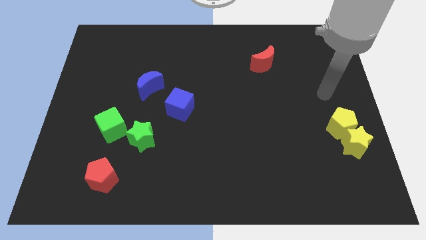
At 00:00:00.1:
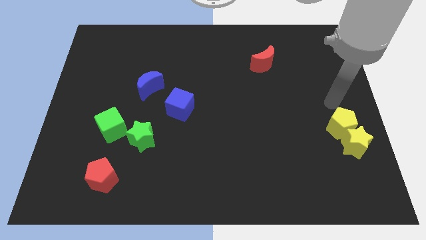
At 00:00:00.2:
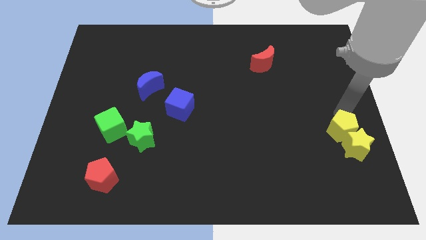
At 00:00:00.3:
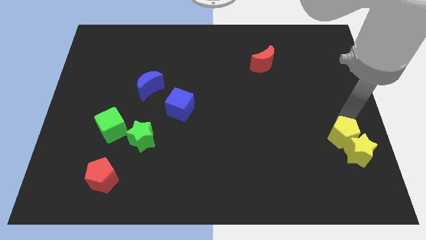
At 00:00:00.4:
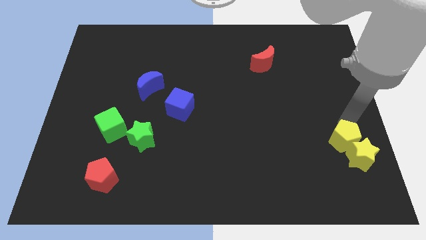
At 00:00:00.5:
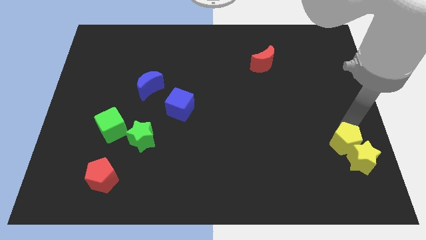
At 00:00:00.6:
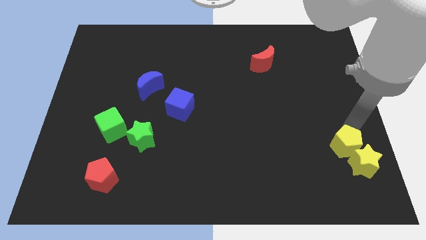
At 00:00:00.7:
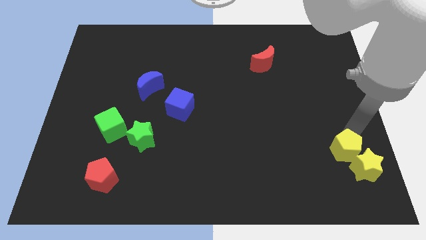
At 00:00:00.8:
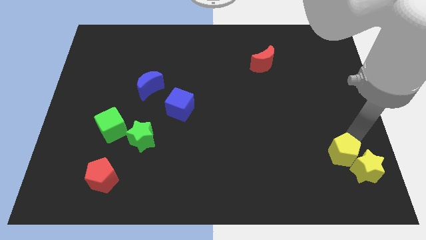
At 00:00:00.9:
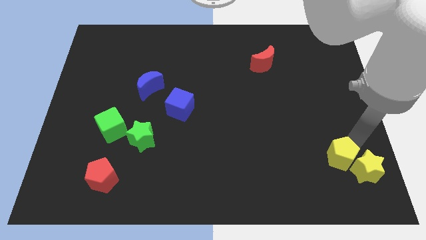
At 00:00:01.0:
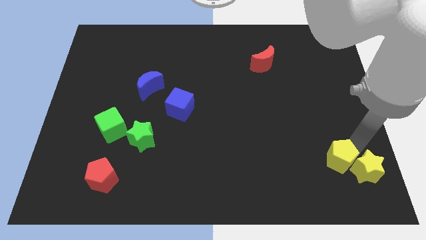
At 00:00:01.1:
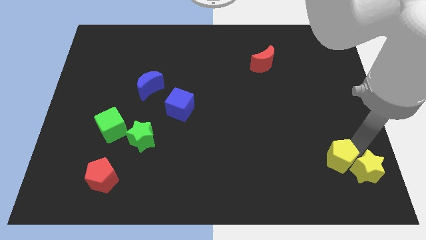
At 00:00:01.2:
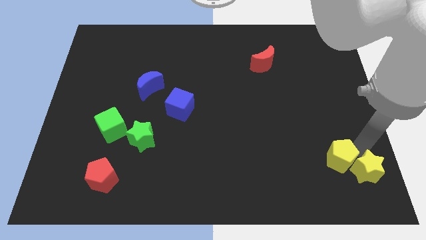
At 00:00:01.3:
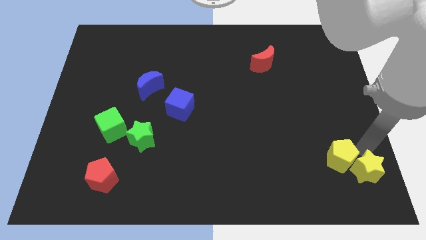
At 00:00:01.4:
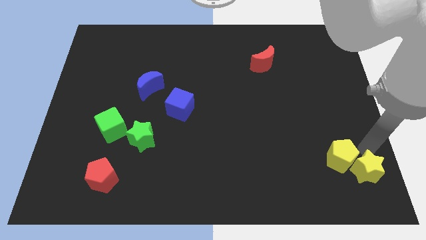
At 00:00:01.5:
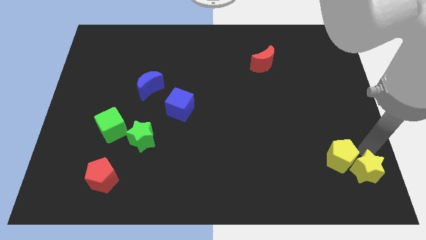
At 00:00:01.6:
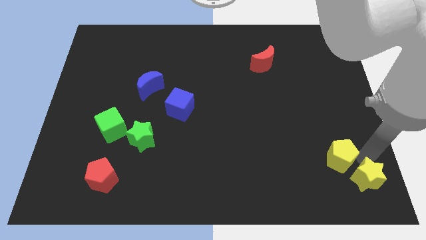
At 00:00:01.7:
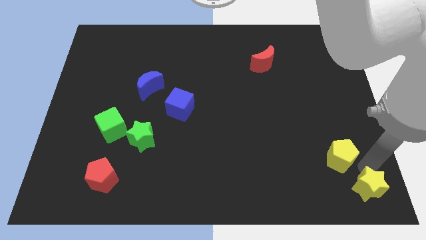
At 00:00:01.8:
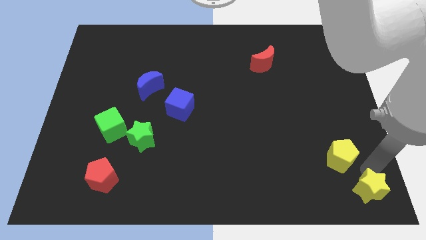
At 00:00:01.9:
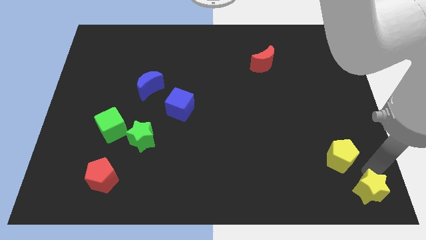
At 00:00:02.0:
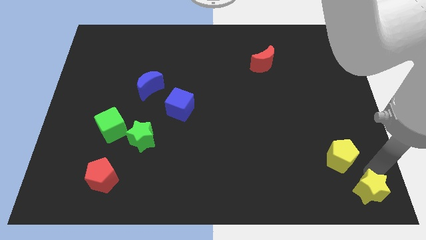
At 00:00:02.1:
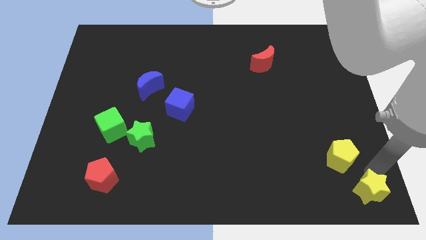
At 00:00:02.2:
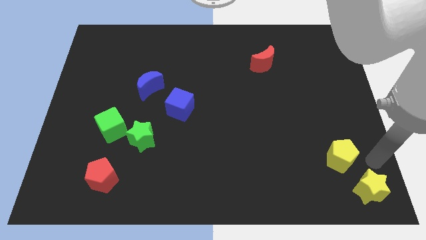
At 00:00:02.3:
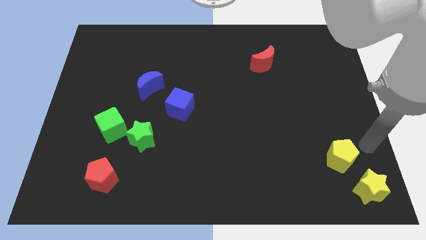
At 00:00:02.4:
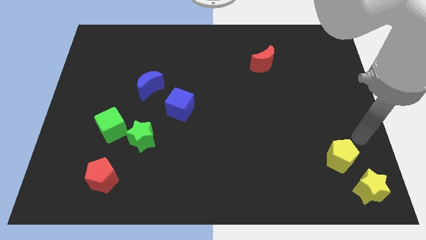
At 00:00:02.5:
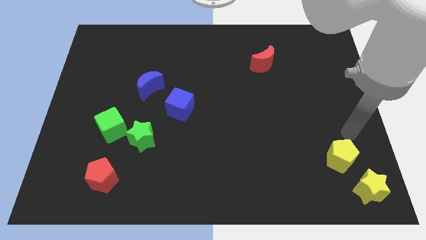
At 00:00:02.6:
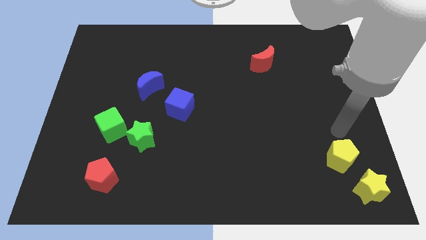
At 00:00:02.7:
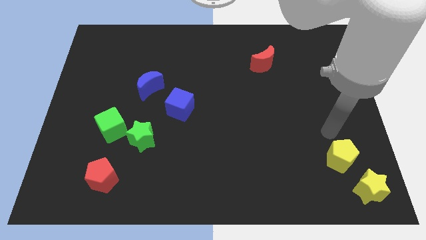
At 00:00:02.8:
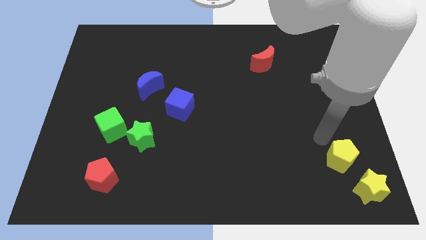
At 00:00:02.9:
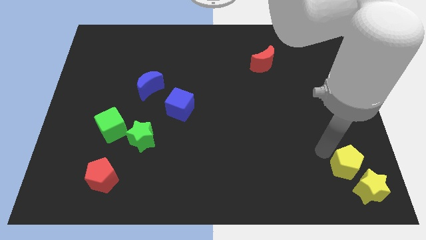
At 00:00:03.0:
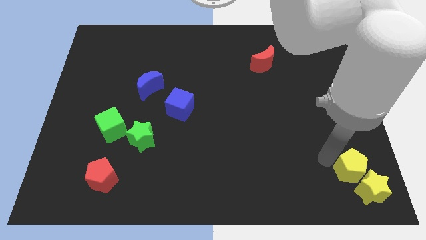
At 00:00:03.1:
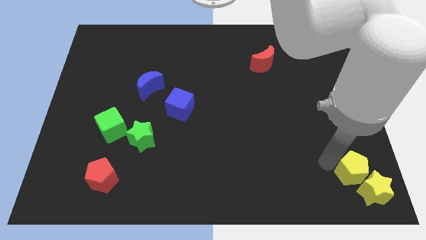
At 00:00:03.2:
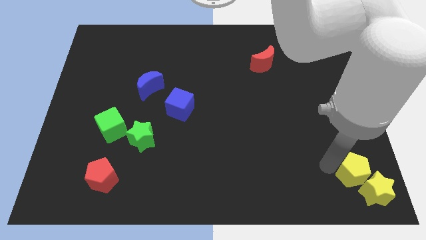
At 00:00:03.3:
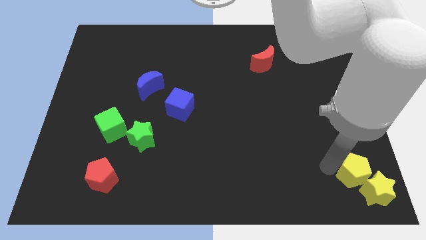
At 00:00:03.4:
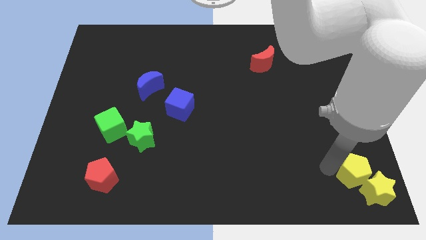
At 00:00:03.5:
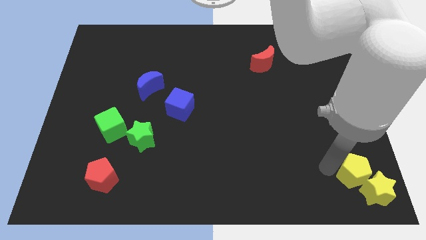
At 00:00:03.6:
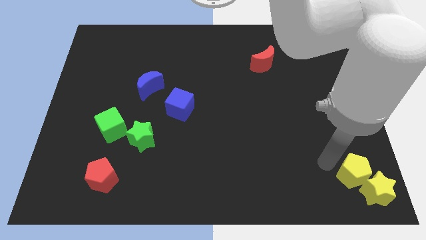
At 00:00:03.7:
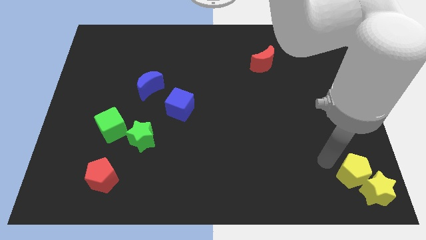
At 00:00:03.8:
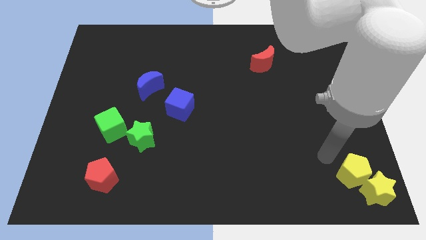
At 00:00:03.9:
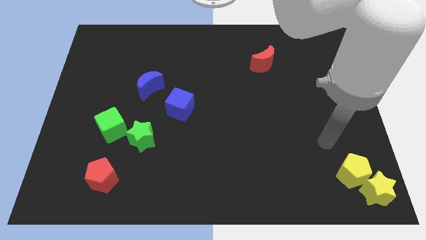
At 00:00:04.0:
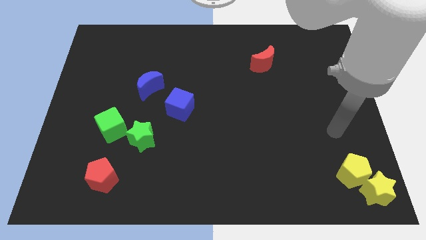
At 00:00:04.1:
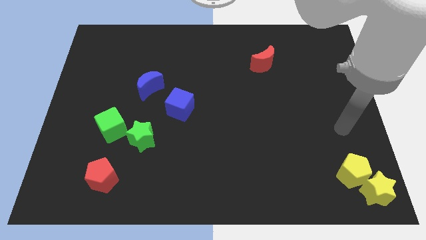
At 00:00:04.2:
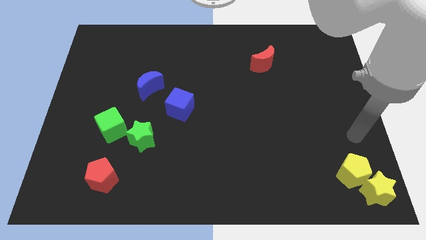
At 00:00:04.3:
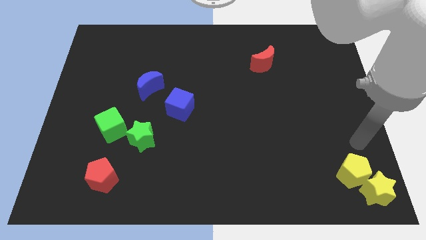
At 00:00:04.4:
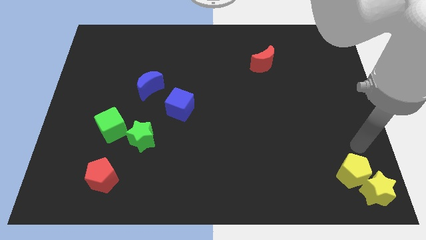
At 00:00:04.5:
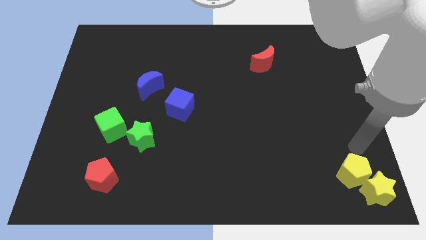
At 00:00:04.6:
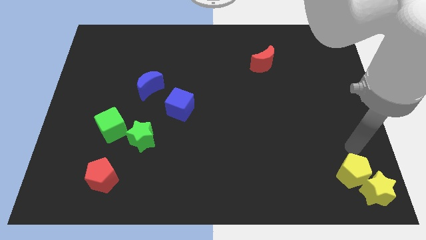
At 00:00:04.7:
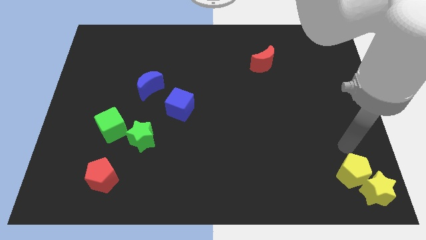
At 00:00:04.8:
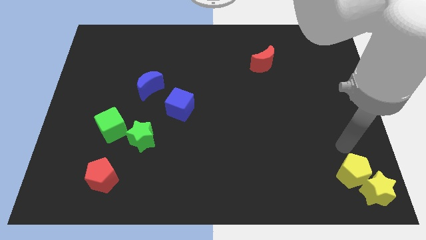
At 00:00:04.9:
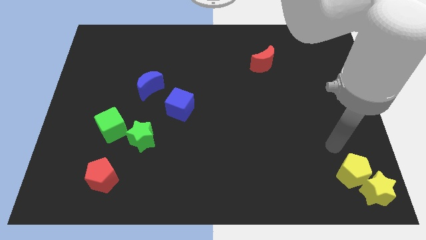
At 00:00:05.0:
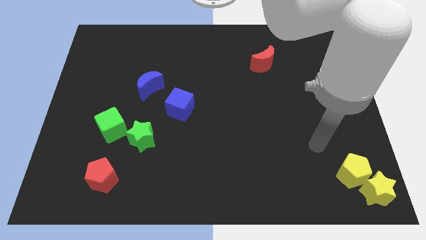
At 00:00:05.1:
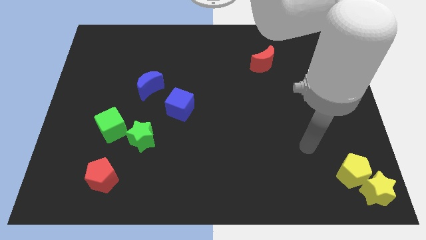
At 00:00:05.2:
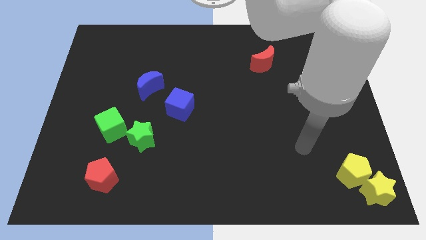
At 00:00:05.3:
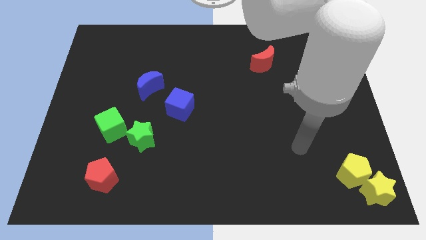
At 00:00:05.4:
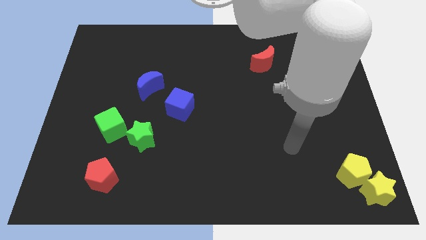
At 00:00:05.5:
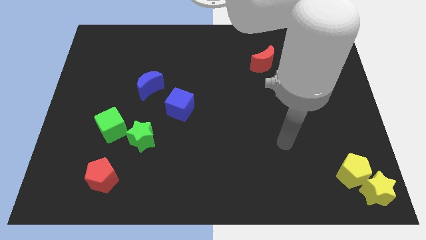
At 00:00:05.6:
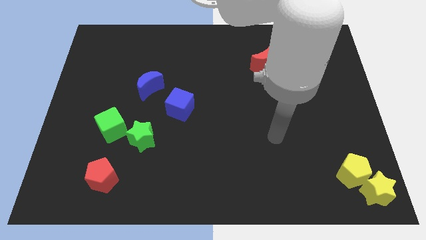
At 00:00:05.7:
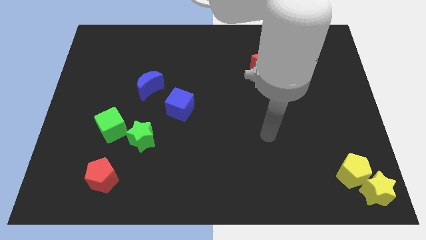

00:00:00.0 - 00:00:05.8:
push both the yellow blocks together to the bottom right corner of the board

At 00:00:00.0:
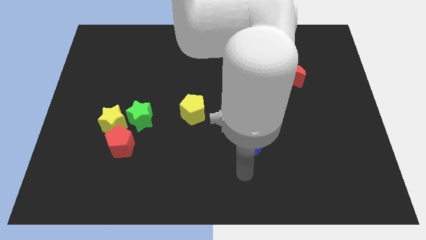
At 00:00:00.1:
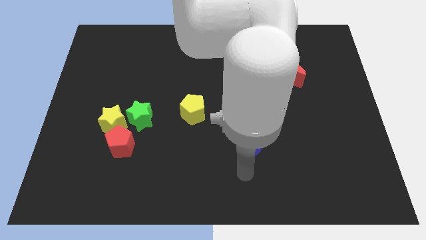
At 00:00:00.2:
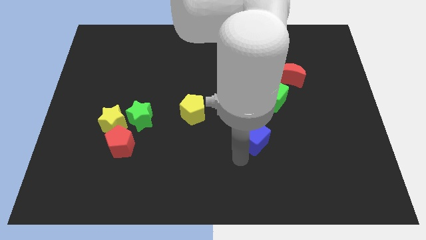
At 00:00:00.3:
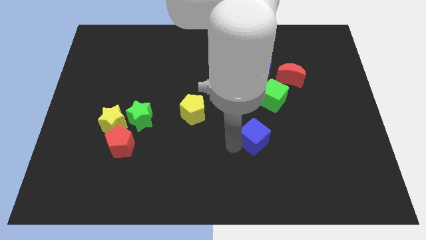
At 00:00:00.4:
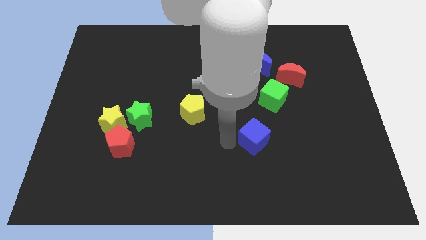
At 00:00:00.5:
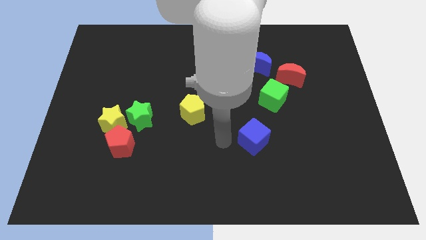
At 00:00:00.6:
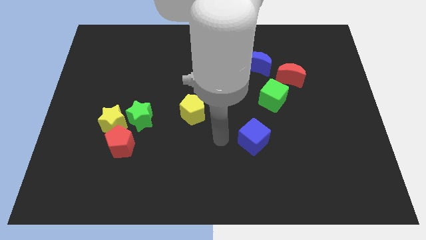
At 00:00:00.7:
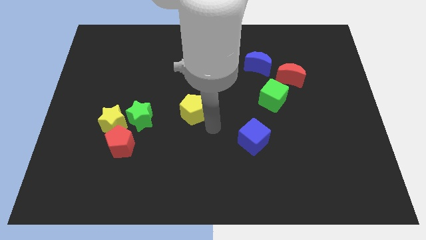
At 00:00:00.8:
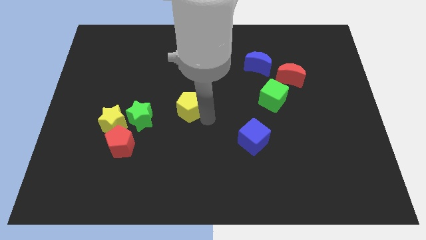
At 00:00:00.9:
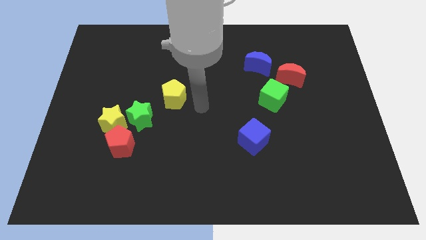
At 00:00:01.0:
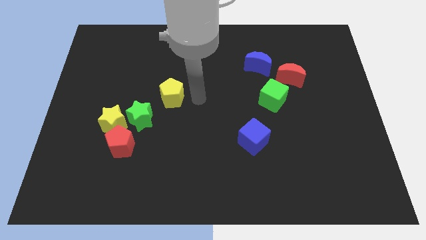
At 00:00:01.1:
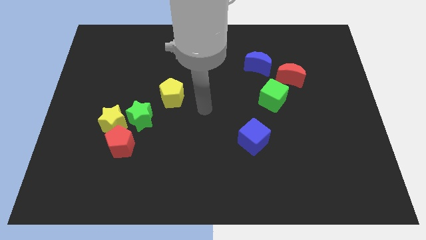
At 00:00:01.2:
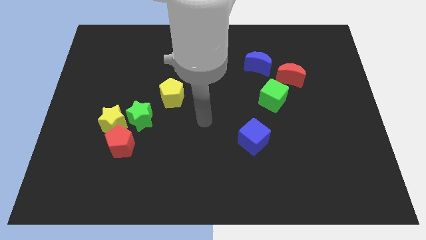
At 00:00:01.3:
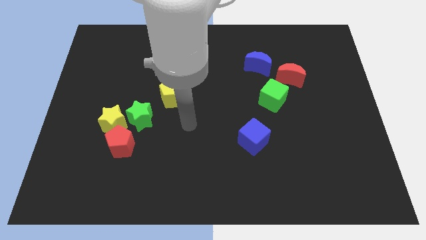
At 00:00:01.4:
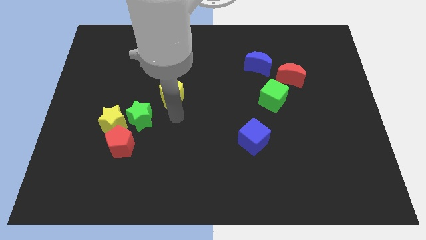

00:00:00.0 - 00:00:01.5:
move the yellow pentagon slightly to the top side of the board

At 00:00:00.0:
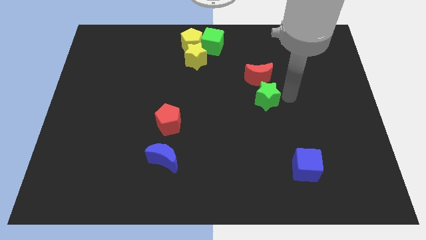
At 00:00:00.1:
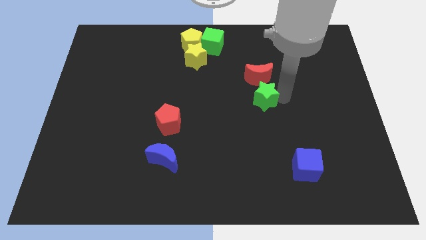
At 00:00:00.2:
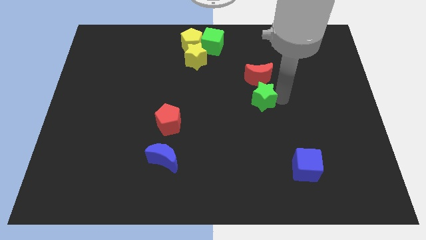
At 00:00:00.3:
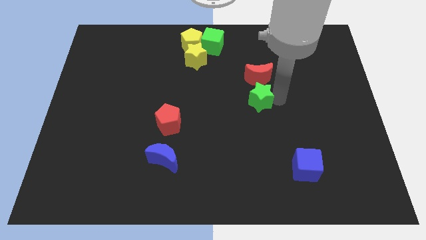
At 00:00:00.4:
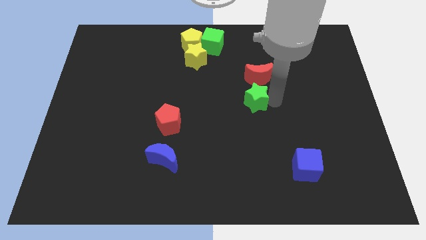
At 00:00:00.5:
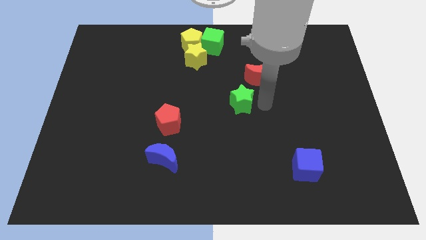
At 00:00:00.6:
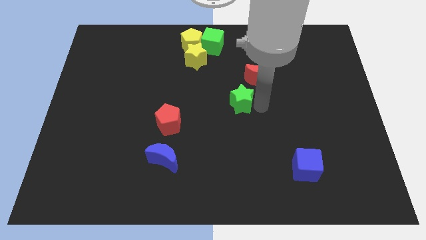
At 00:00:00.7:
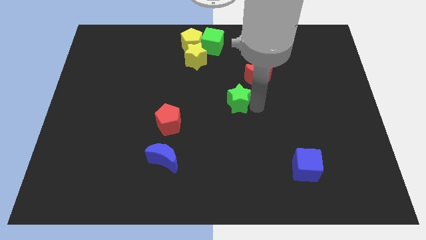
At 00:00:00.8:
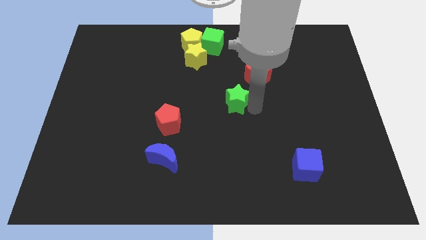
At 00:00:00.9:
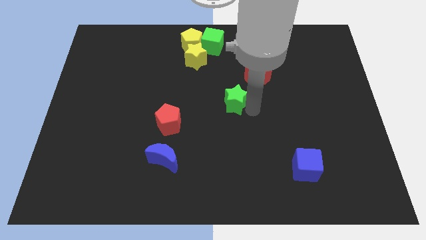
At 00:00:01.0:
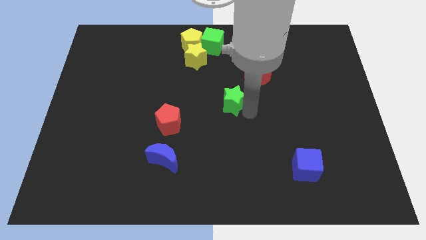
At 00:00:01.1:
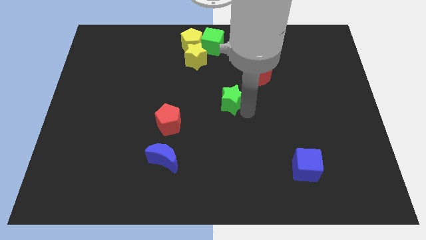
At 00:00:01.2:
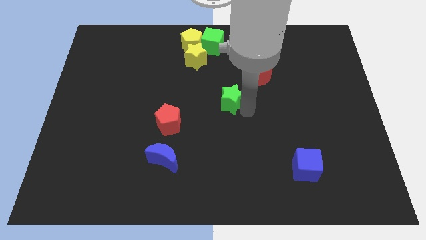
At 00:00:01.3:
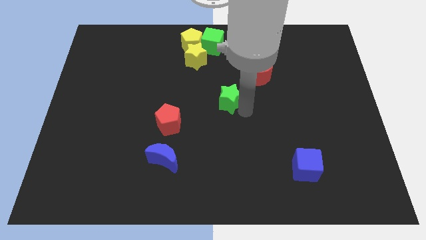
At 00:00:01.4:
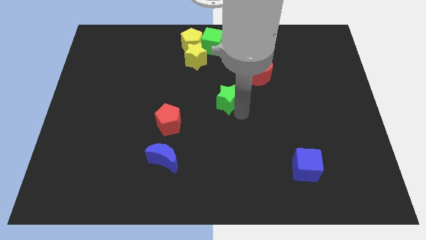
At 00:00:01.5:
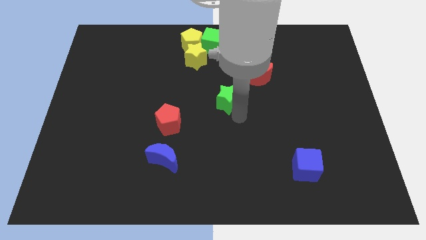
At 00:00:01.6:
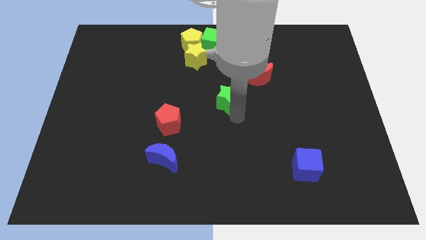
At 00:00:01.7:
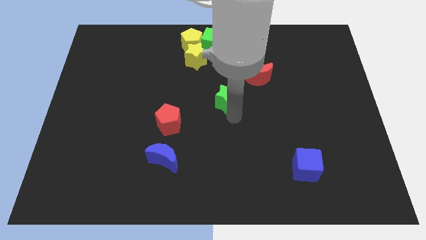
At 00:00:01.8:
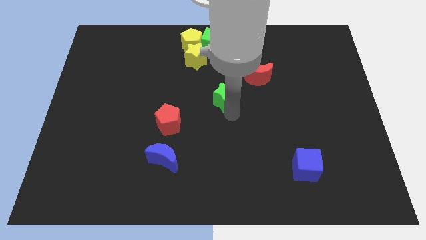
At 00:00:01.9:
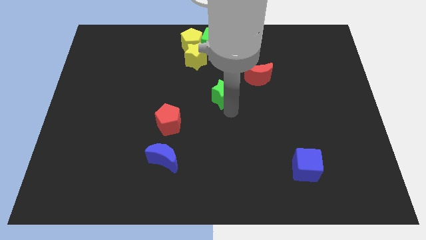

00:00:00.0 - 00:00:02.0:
put the green star between the red pentagon and red moon
